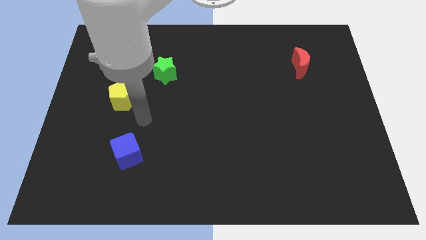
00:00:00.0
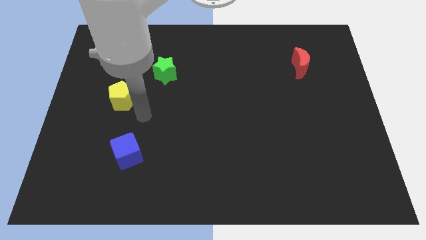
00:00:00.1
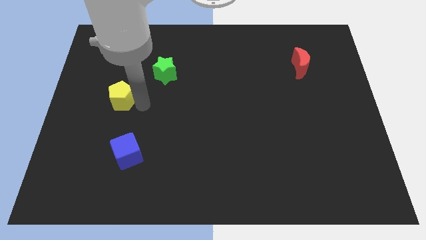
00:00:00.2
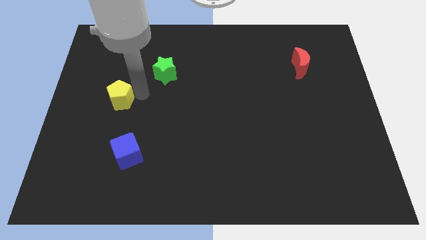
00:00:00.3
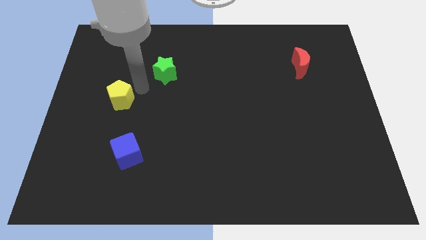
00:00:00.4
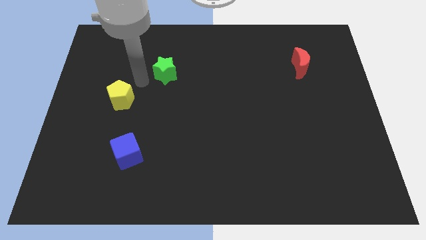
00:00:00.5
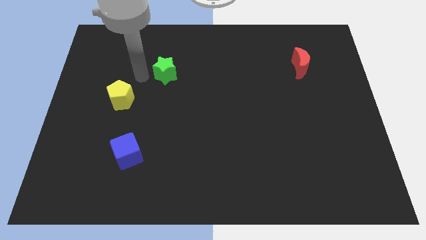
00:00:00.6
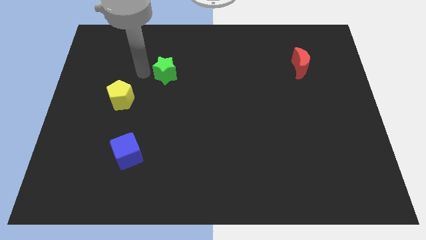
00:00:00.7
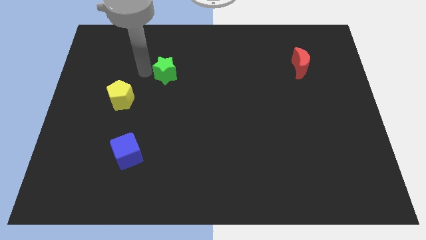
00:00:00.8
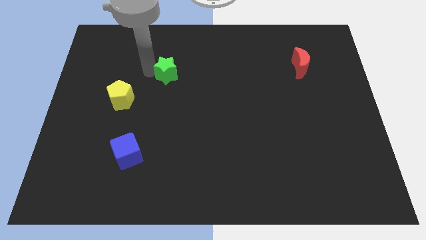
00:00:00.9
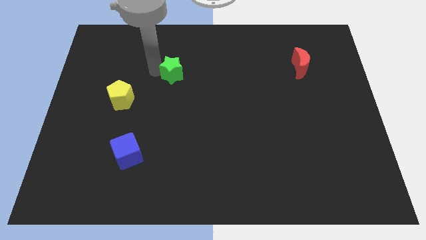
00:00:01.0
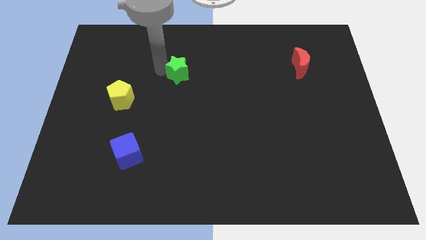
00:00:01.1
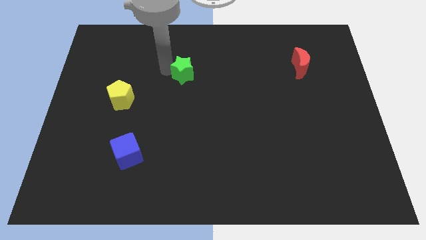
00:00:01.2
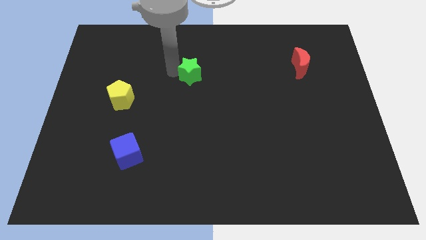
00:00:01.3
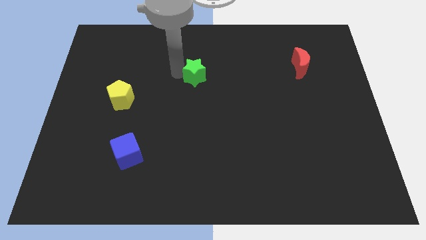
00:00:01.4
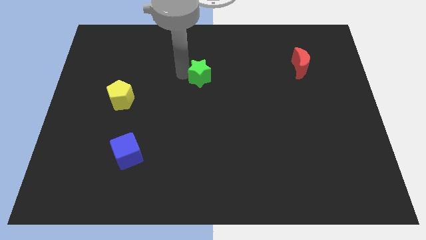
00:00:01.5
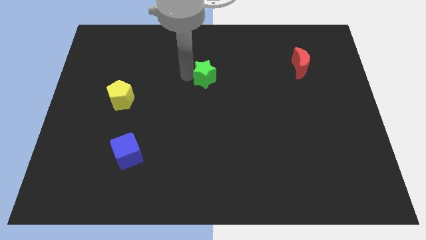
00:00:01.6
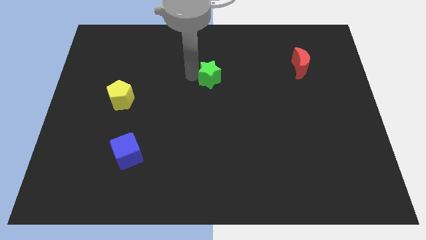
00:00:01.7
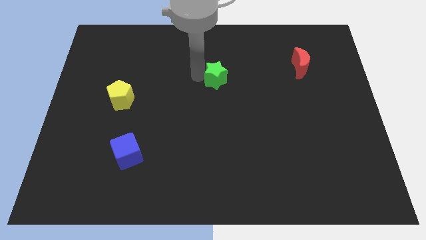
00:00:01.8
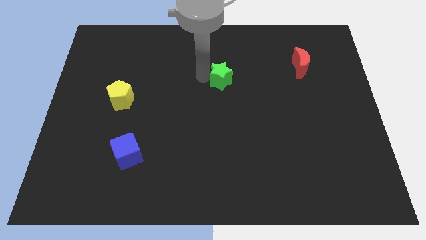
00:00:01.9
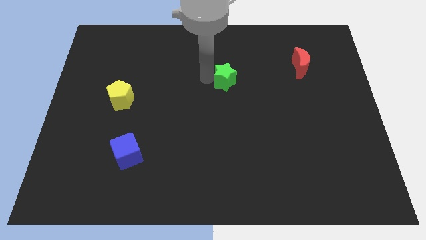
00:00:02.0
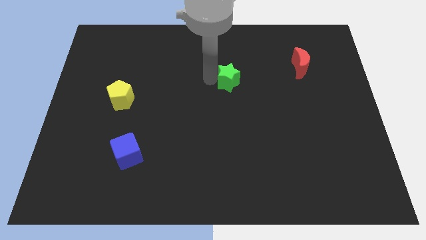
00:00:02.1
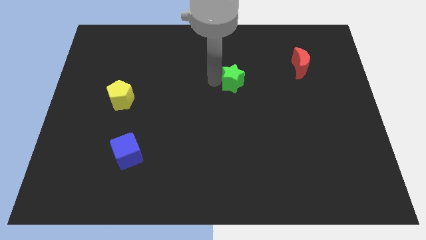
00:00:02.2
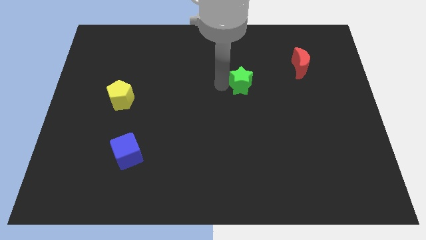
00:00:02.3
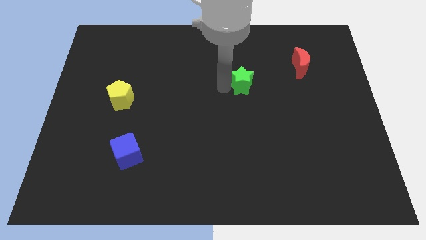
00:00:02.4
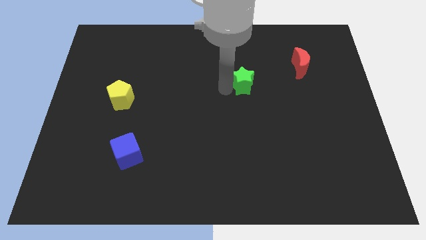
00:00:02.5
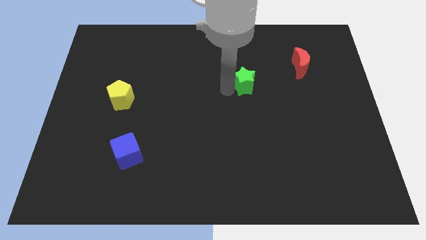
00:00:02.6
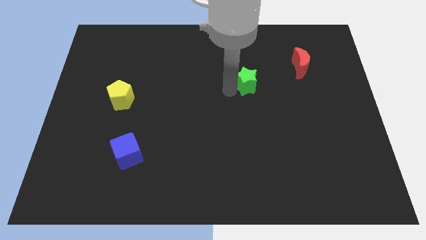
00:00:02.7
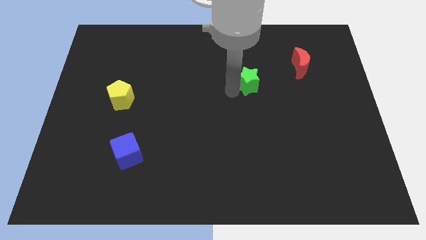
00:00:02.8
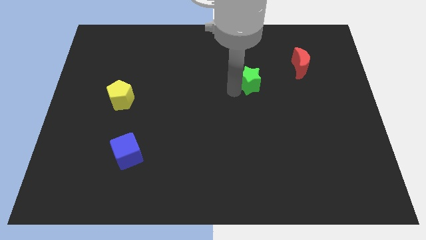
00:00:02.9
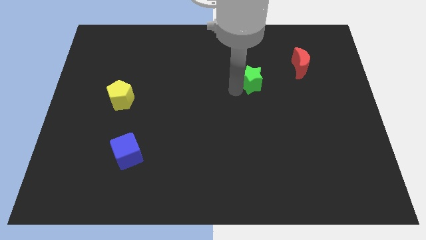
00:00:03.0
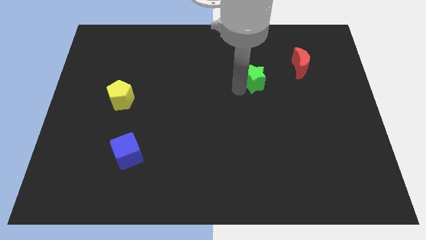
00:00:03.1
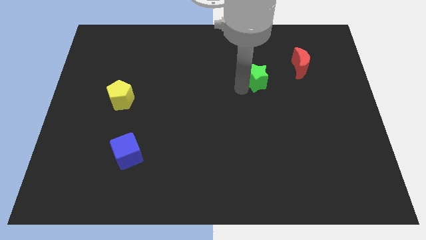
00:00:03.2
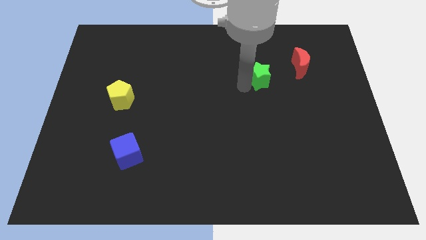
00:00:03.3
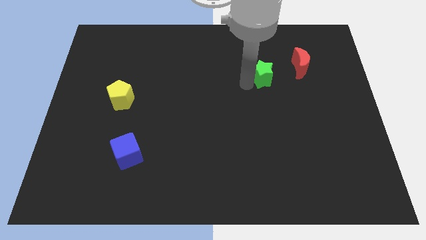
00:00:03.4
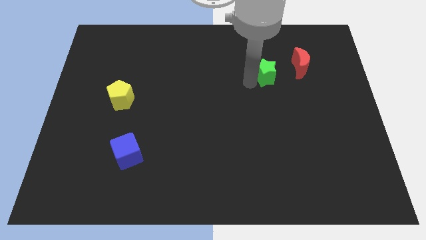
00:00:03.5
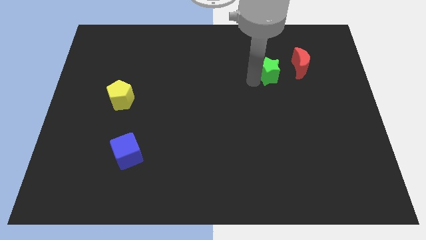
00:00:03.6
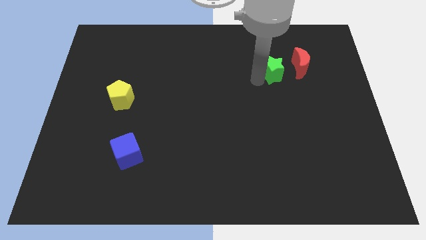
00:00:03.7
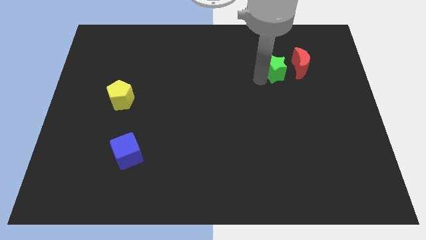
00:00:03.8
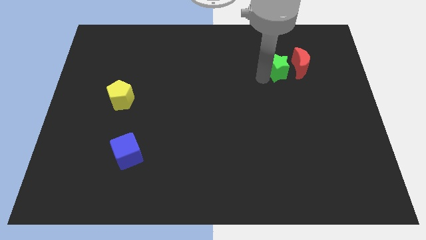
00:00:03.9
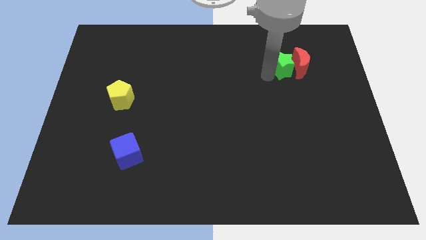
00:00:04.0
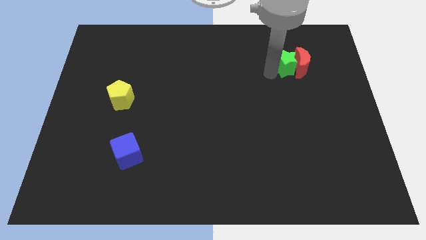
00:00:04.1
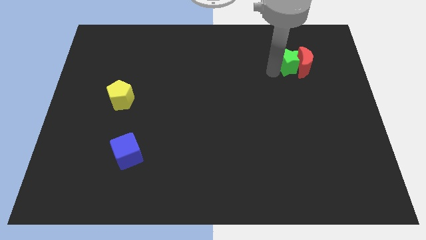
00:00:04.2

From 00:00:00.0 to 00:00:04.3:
put the star to the moon

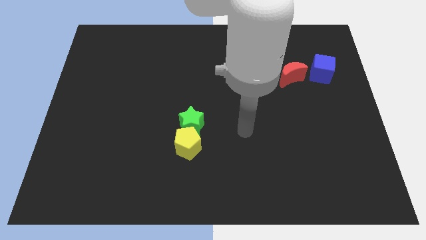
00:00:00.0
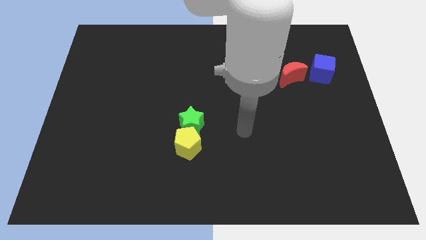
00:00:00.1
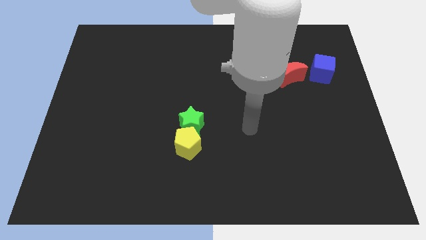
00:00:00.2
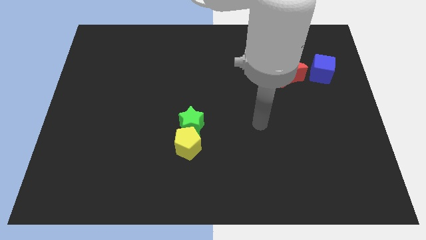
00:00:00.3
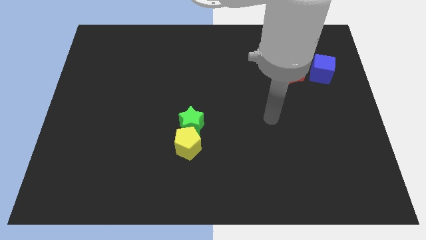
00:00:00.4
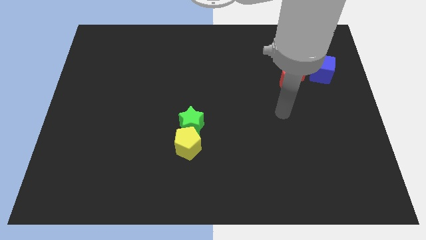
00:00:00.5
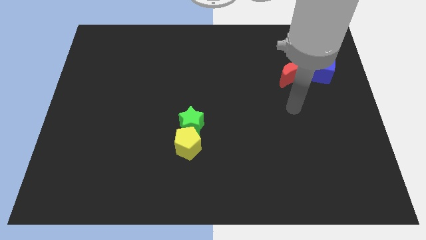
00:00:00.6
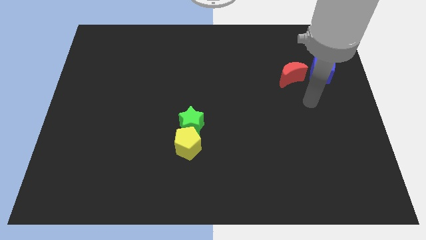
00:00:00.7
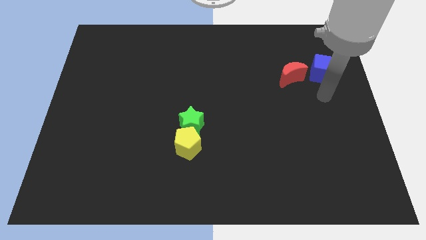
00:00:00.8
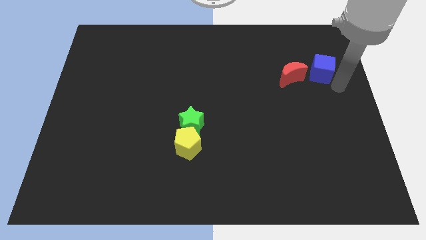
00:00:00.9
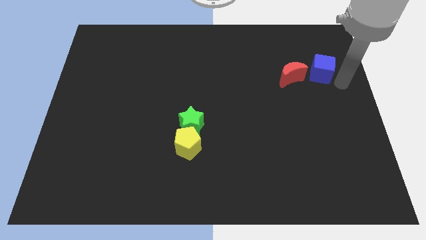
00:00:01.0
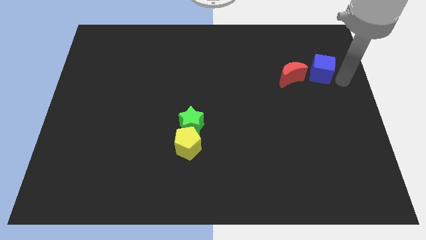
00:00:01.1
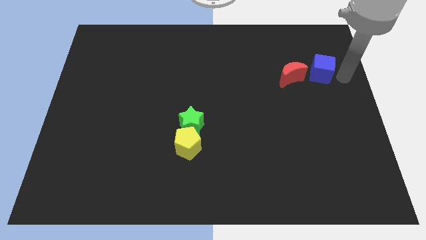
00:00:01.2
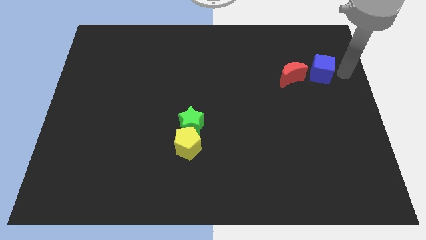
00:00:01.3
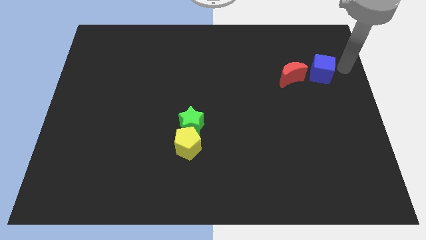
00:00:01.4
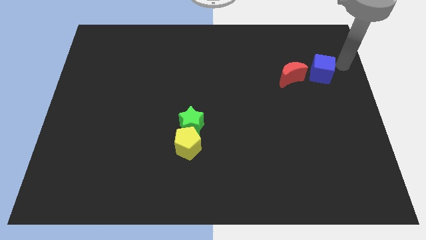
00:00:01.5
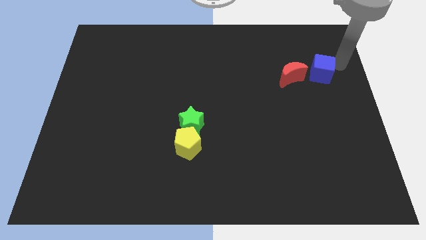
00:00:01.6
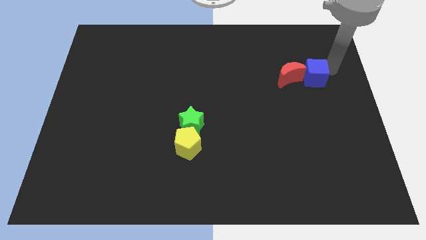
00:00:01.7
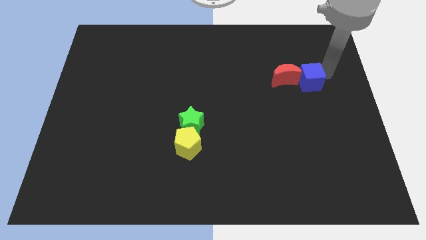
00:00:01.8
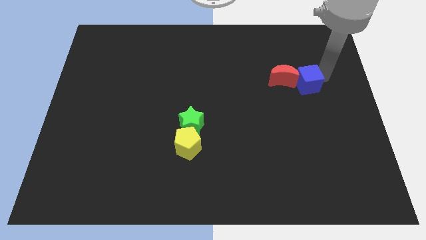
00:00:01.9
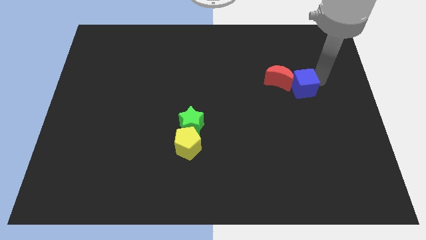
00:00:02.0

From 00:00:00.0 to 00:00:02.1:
put the blue block next to the red block

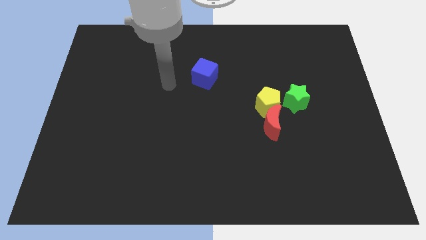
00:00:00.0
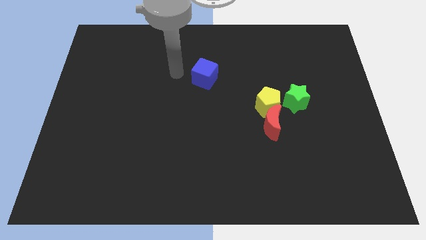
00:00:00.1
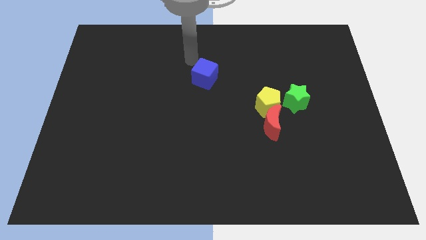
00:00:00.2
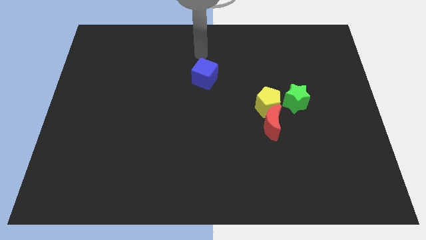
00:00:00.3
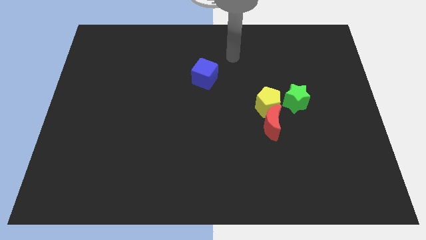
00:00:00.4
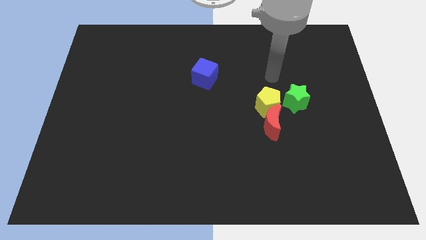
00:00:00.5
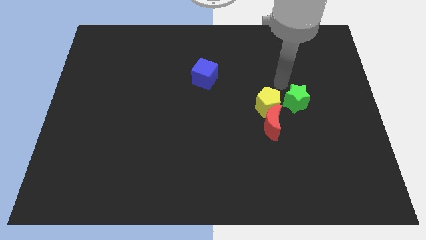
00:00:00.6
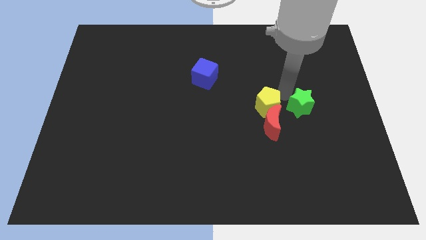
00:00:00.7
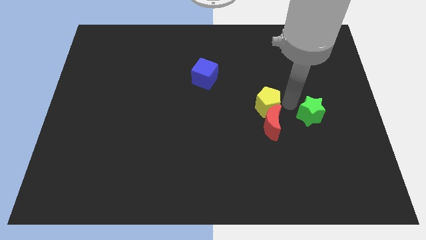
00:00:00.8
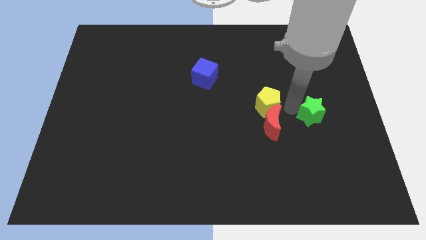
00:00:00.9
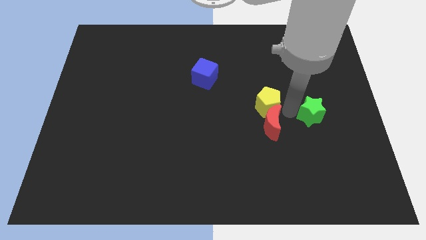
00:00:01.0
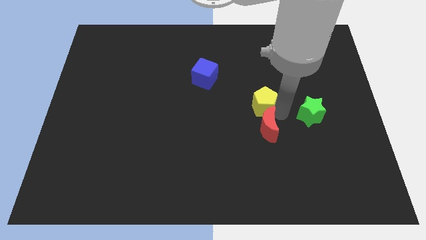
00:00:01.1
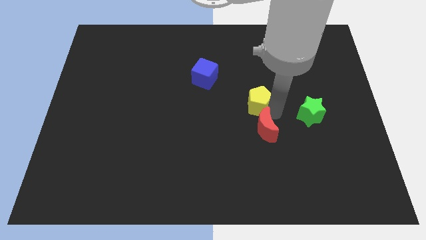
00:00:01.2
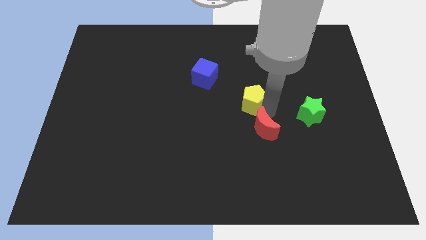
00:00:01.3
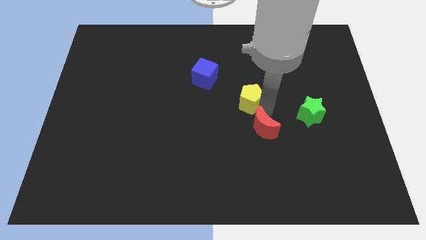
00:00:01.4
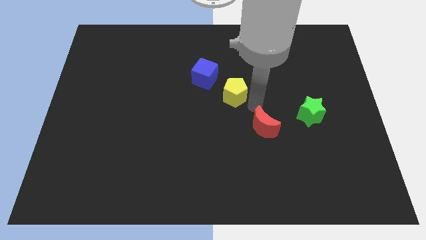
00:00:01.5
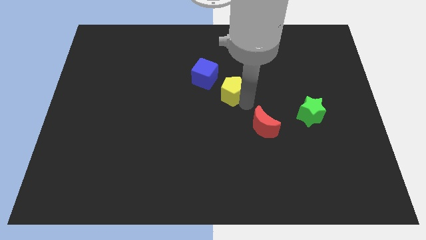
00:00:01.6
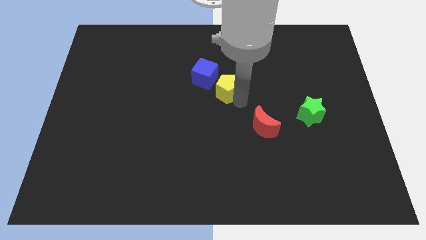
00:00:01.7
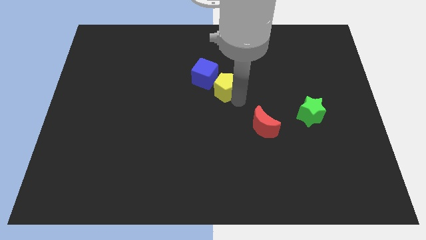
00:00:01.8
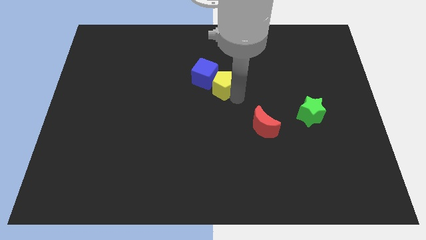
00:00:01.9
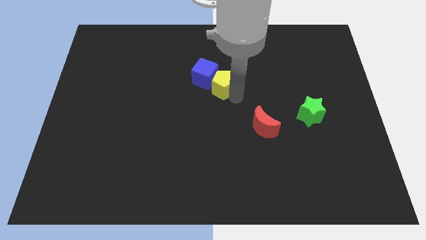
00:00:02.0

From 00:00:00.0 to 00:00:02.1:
move the yellow block to the cube

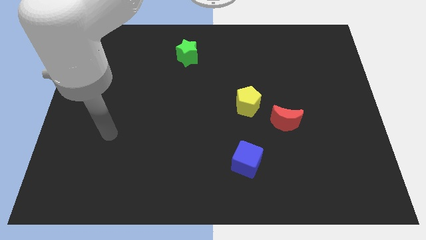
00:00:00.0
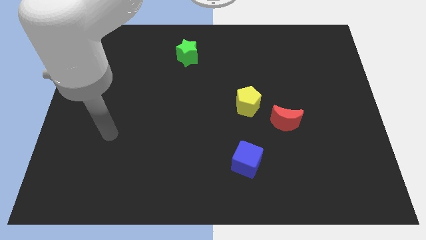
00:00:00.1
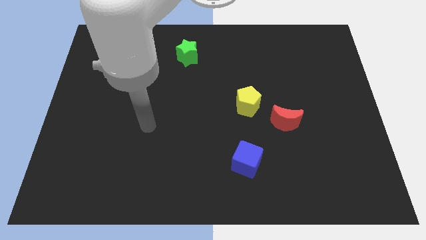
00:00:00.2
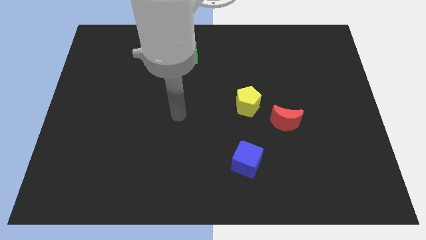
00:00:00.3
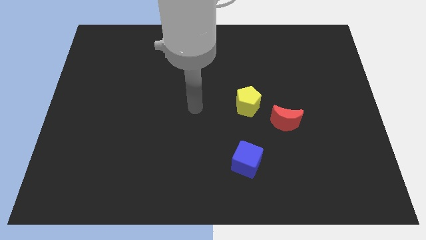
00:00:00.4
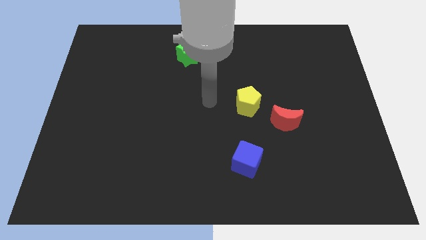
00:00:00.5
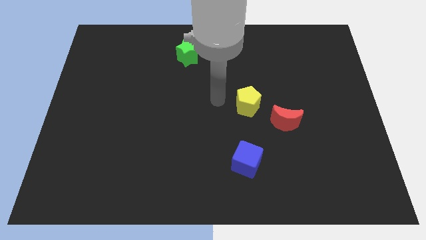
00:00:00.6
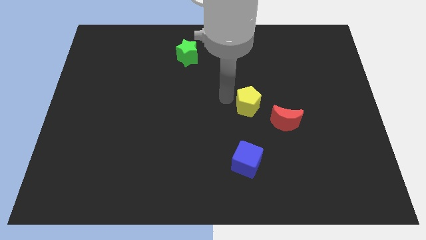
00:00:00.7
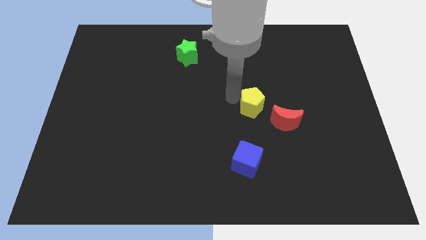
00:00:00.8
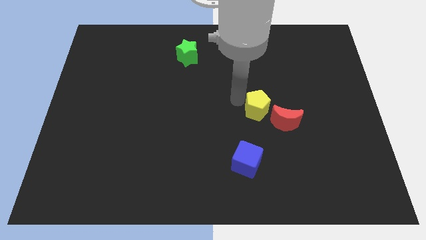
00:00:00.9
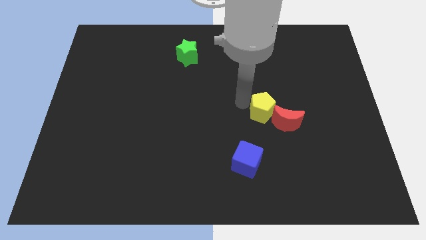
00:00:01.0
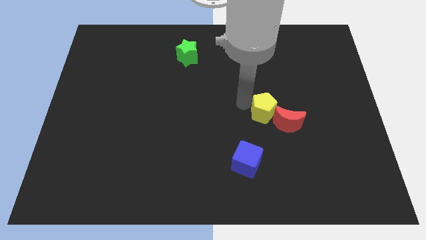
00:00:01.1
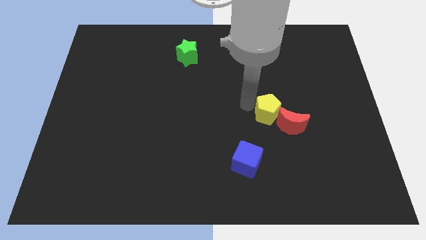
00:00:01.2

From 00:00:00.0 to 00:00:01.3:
put the yellow pentagon close to the red block
